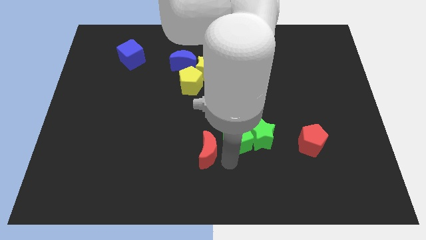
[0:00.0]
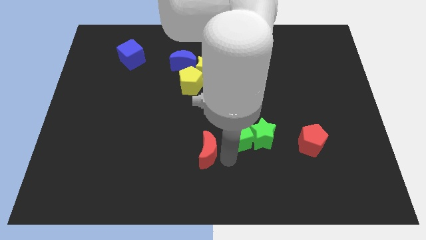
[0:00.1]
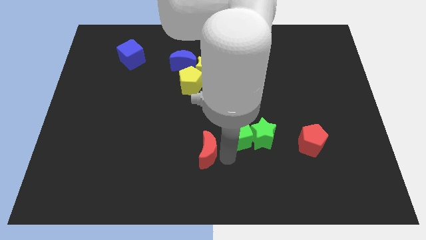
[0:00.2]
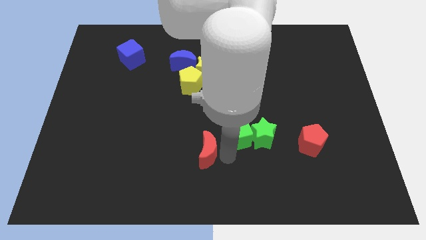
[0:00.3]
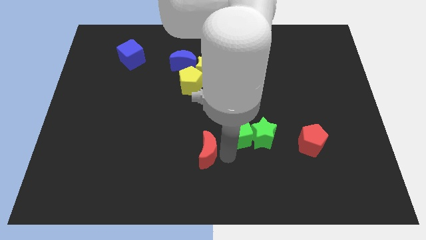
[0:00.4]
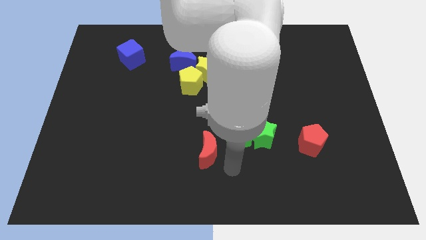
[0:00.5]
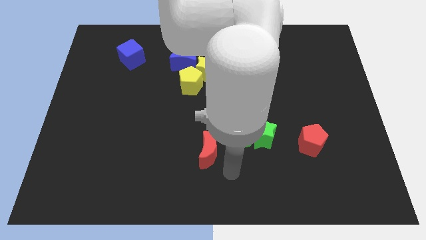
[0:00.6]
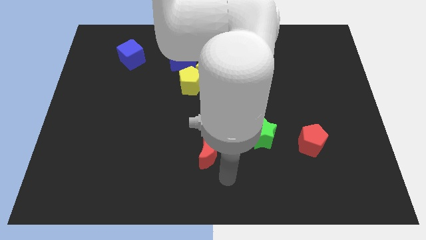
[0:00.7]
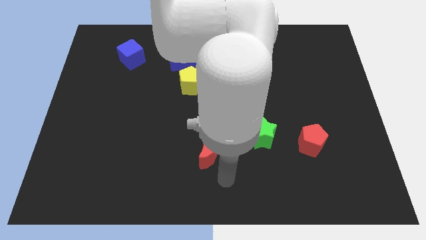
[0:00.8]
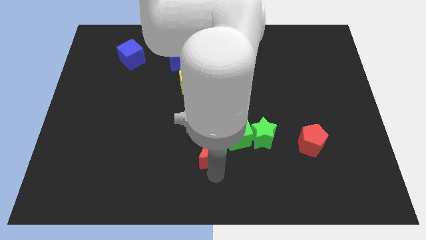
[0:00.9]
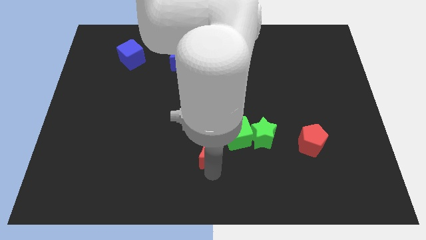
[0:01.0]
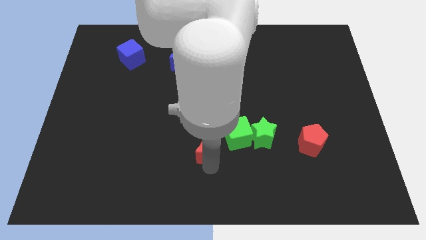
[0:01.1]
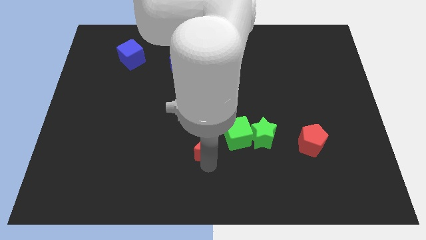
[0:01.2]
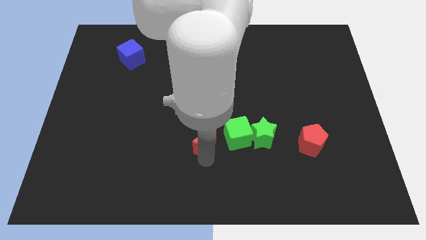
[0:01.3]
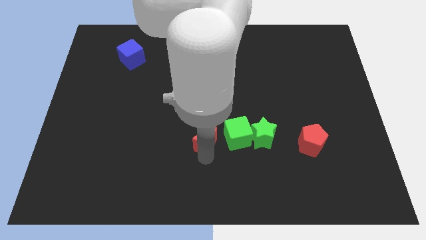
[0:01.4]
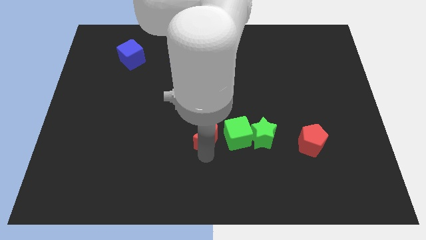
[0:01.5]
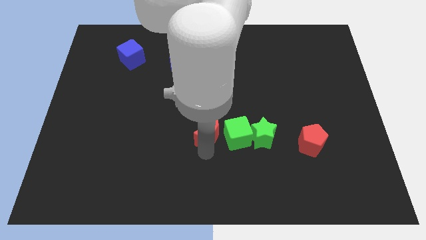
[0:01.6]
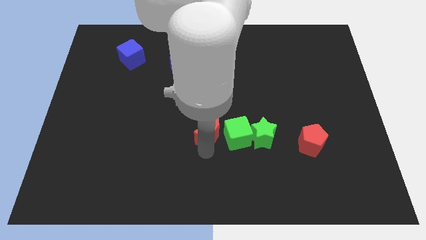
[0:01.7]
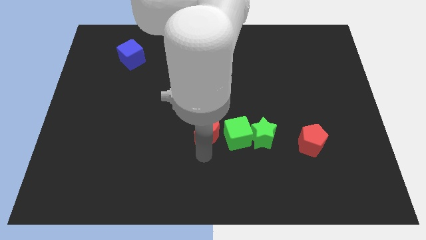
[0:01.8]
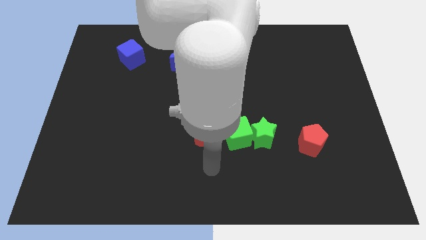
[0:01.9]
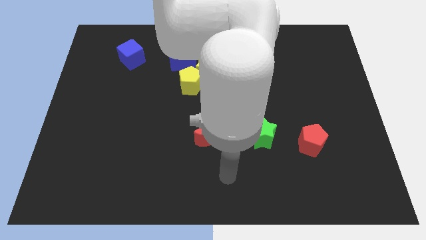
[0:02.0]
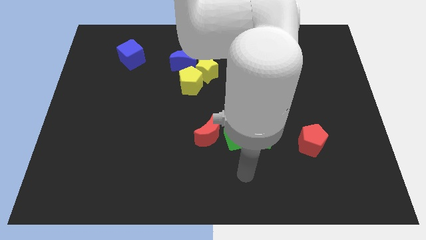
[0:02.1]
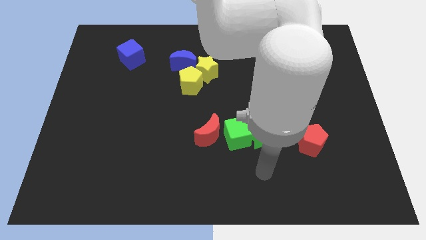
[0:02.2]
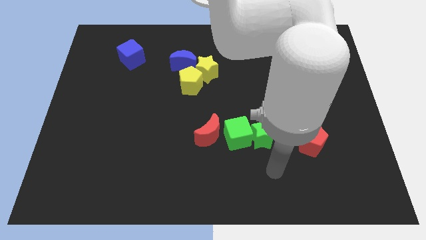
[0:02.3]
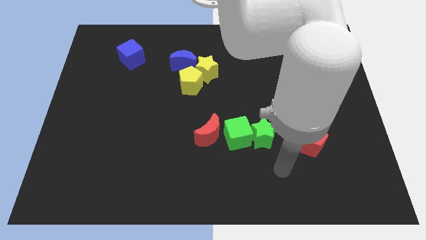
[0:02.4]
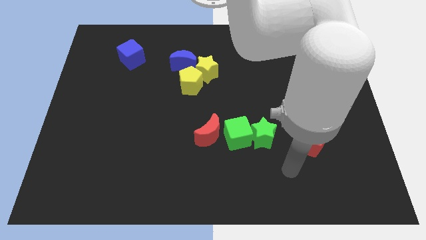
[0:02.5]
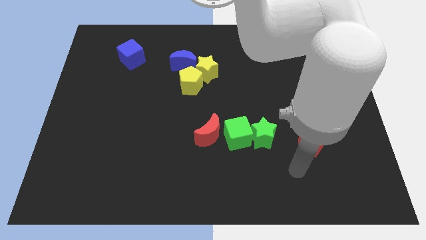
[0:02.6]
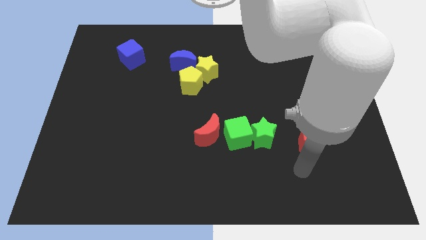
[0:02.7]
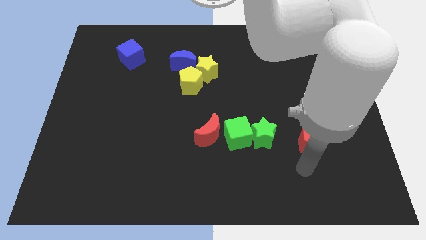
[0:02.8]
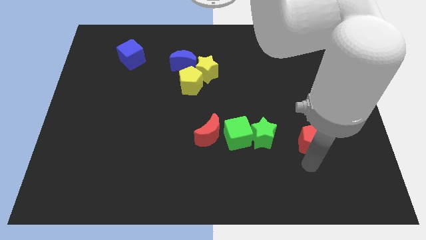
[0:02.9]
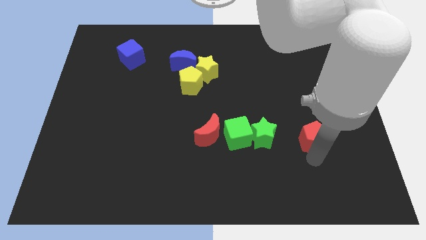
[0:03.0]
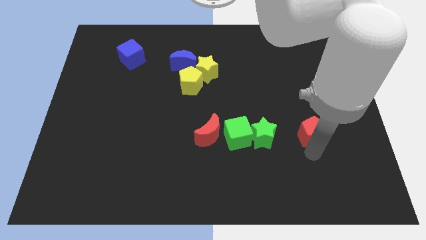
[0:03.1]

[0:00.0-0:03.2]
place the red crescent to the left of the green cube

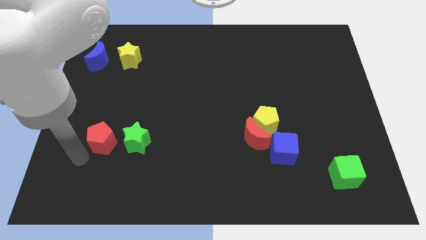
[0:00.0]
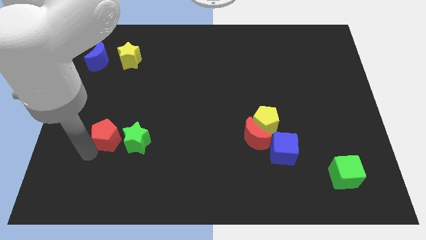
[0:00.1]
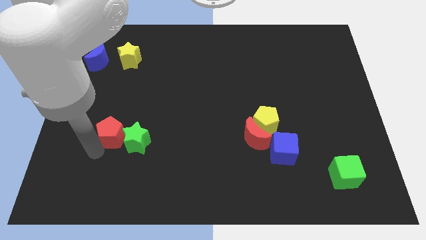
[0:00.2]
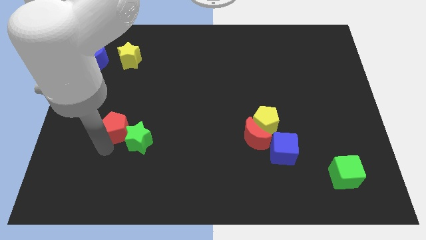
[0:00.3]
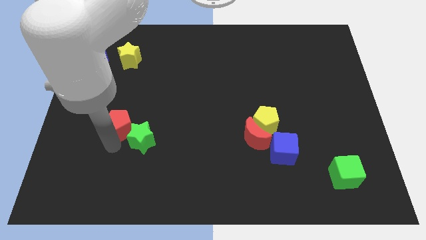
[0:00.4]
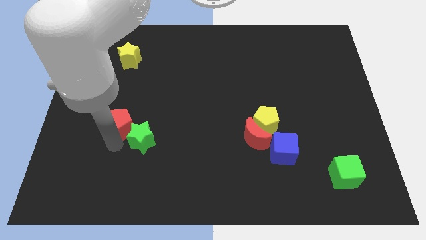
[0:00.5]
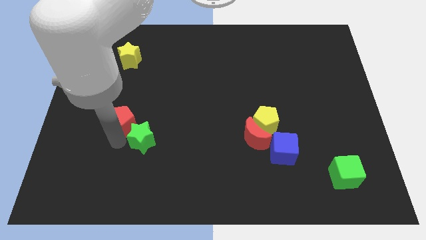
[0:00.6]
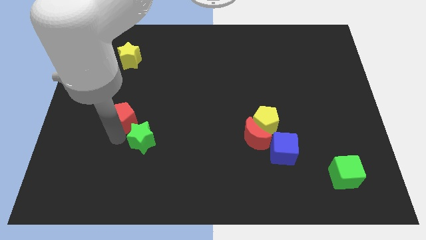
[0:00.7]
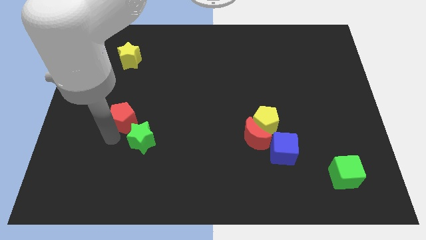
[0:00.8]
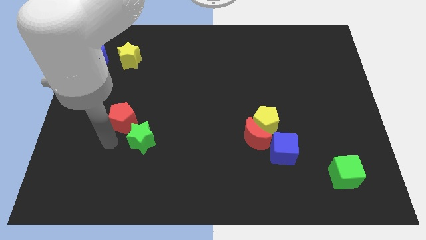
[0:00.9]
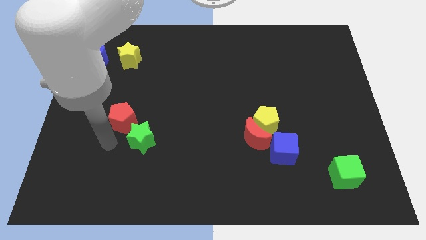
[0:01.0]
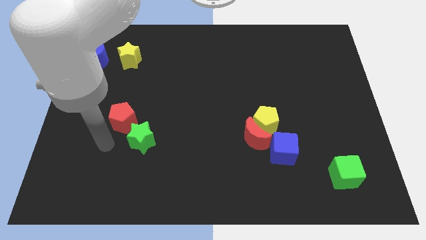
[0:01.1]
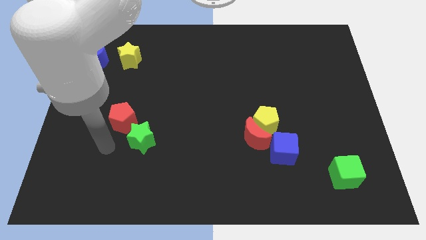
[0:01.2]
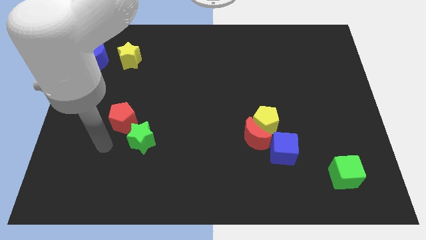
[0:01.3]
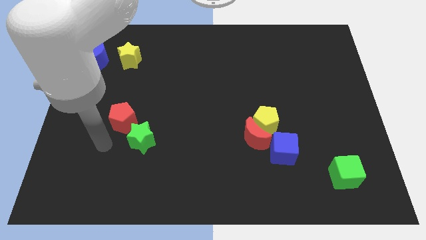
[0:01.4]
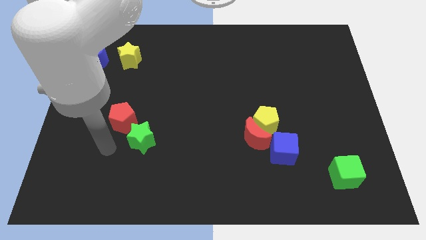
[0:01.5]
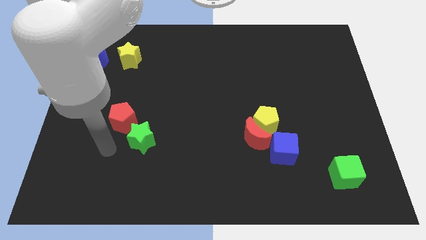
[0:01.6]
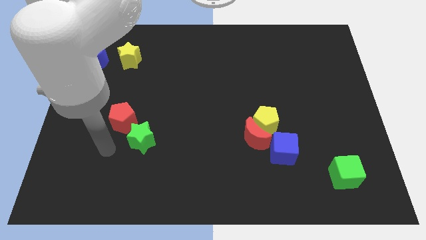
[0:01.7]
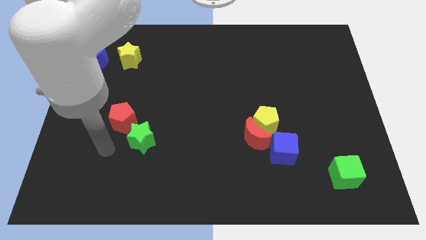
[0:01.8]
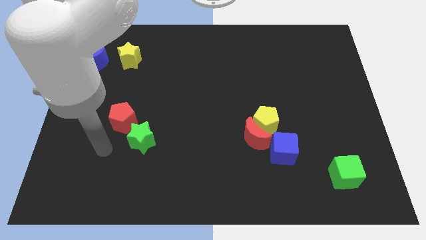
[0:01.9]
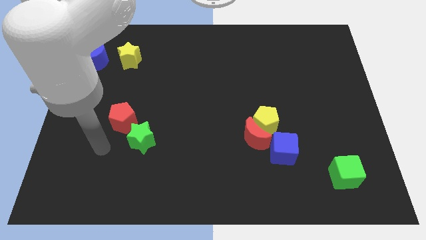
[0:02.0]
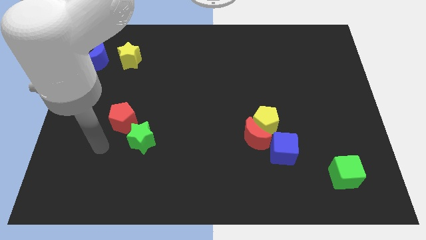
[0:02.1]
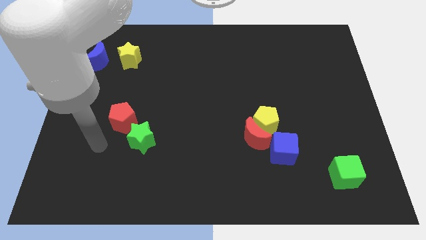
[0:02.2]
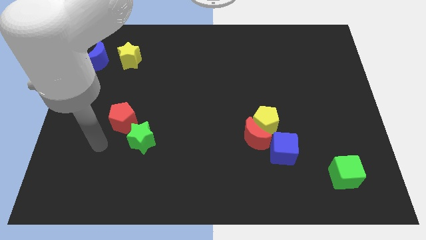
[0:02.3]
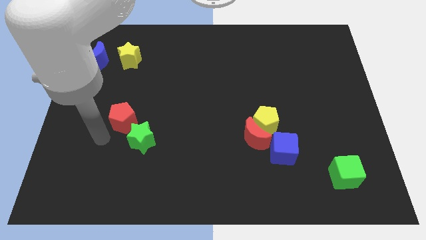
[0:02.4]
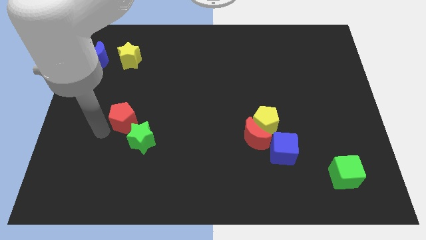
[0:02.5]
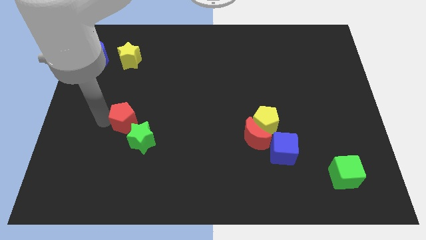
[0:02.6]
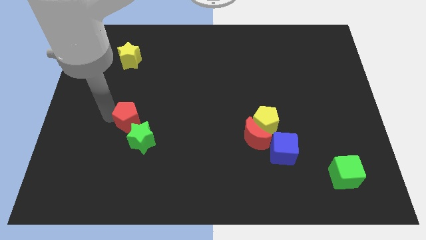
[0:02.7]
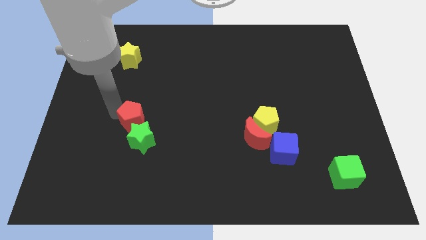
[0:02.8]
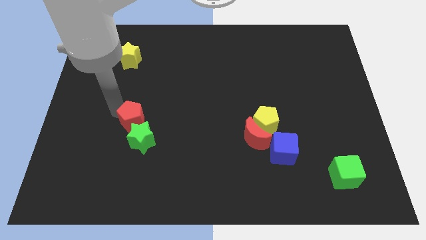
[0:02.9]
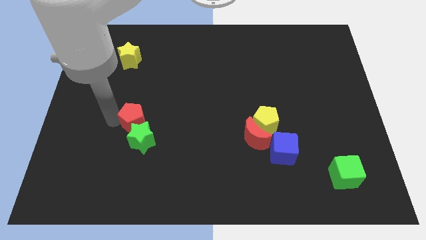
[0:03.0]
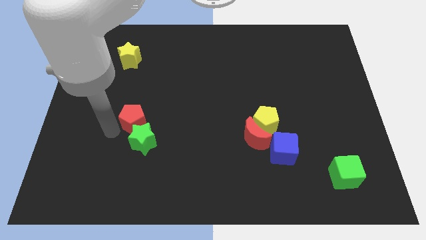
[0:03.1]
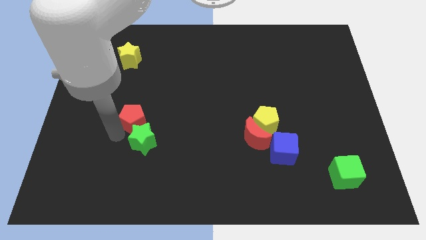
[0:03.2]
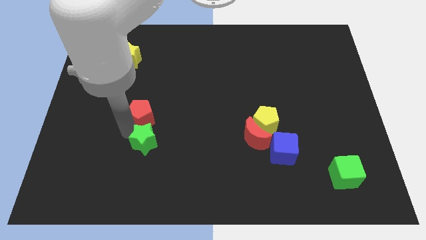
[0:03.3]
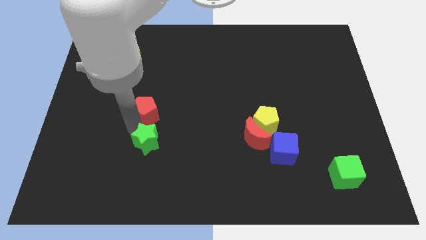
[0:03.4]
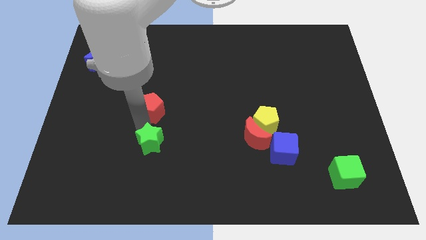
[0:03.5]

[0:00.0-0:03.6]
move red pentagon above green star

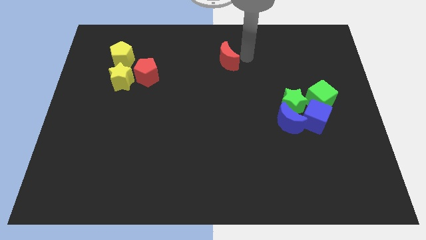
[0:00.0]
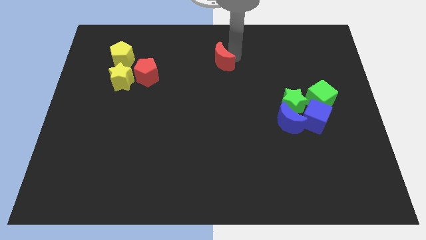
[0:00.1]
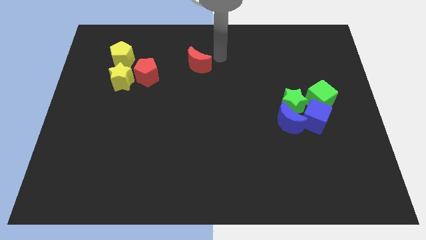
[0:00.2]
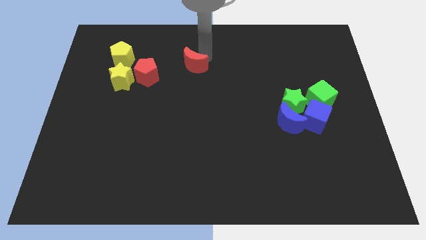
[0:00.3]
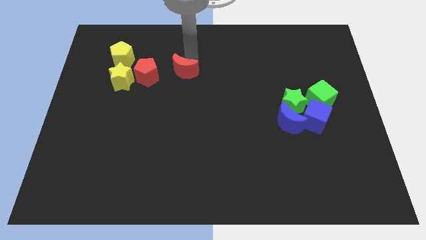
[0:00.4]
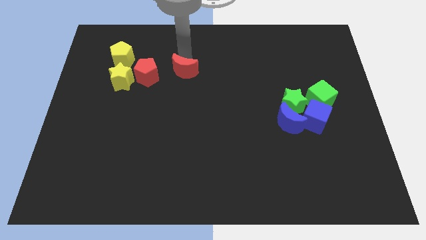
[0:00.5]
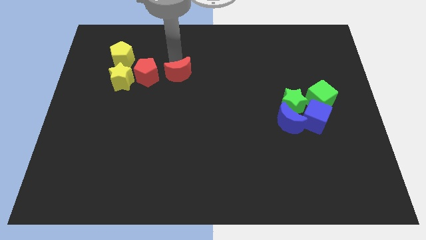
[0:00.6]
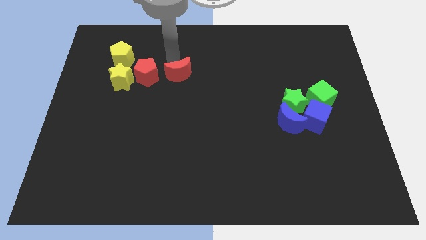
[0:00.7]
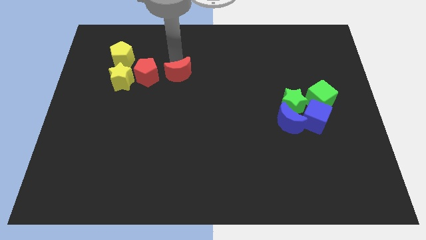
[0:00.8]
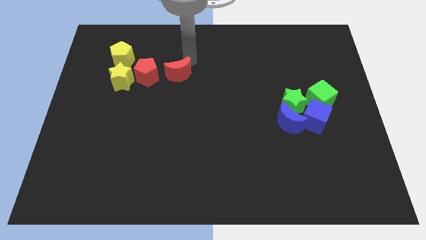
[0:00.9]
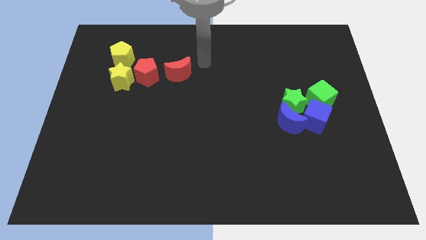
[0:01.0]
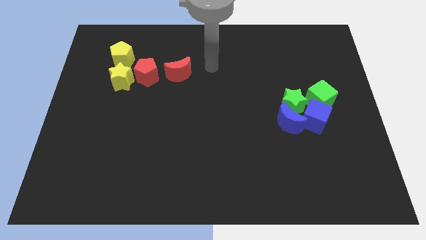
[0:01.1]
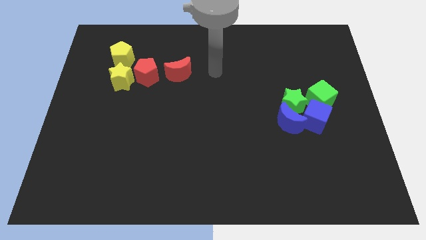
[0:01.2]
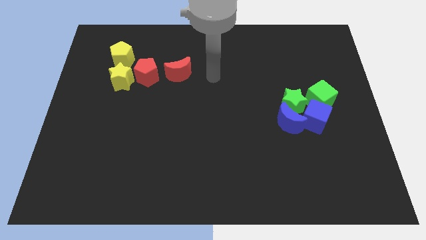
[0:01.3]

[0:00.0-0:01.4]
move the red crescent close to the red pentagon

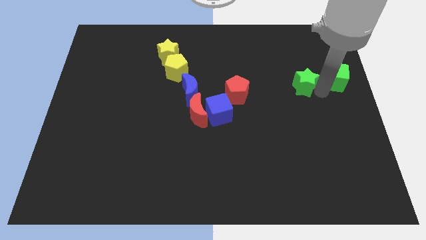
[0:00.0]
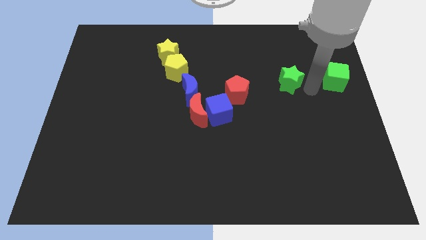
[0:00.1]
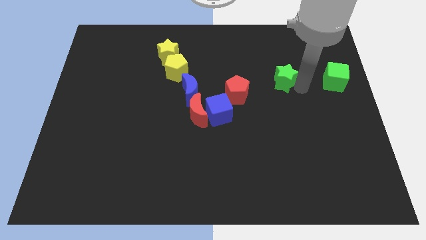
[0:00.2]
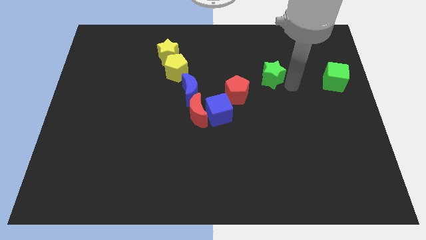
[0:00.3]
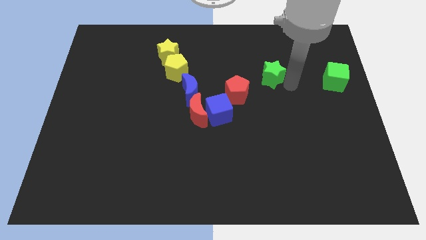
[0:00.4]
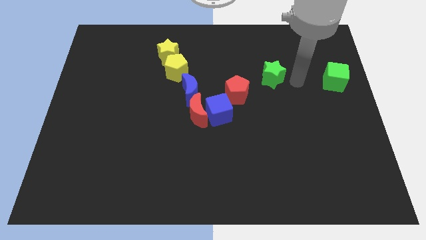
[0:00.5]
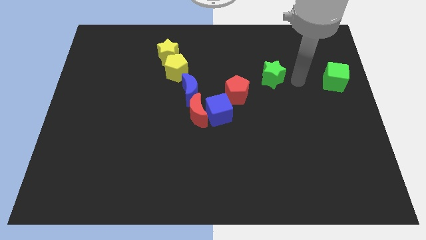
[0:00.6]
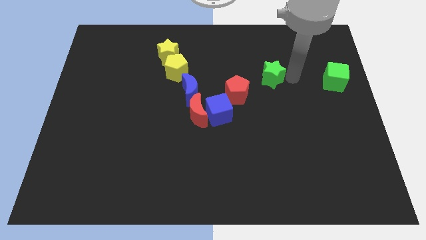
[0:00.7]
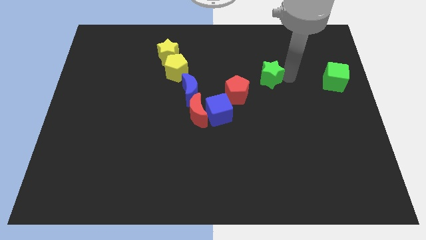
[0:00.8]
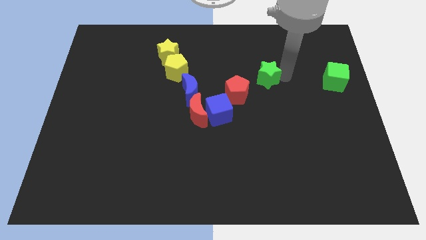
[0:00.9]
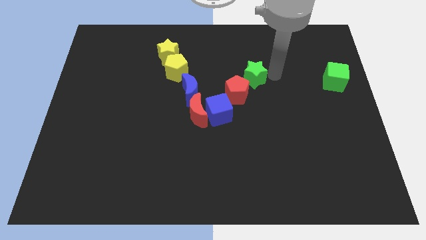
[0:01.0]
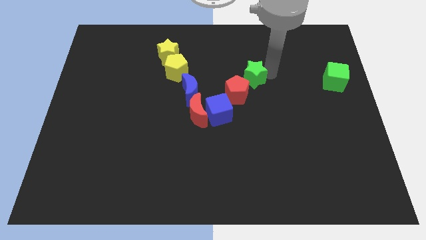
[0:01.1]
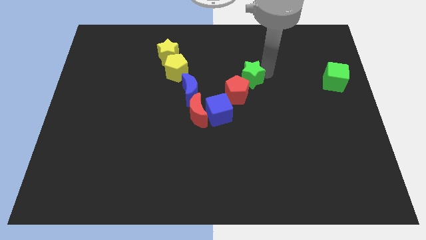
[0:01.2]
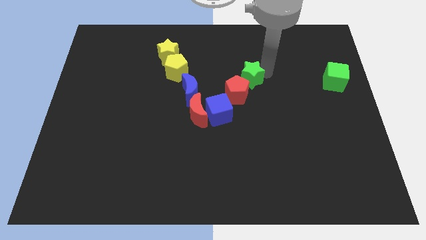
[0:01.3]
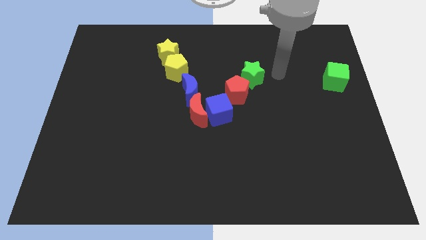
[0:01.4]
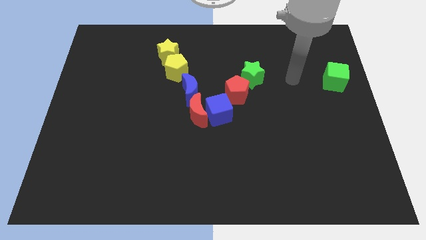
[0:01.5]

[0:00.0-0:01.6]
move the green star to the top right side of the red pentagon
